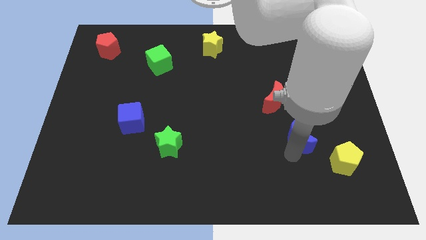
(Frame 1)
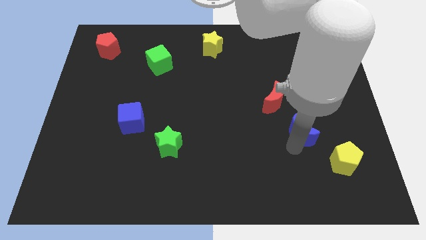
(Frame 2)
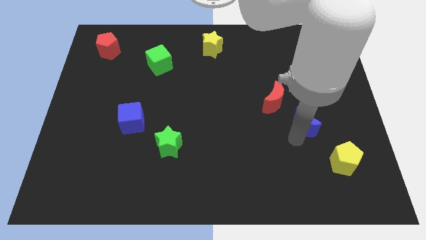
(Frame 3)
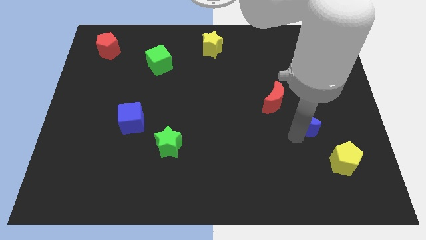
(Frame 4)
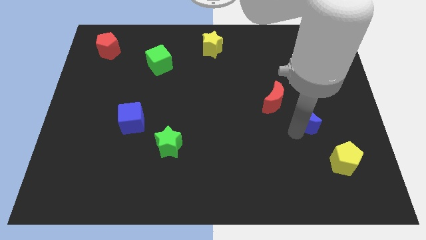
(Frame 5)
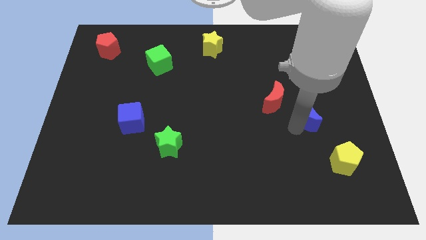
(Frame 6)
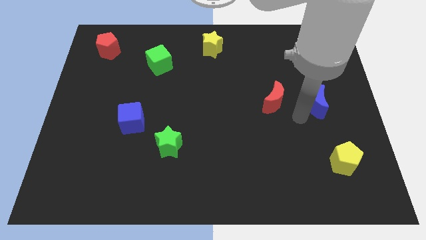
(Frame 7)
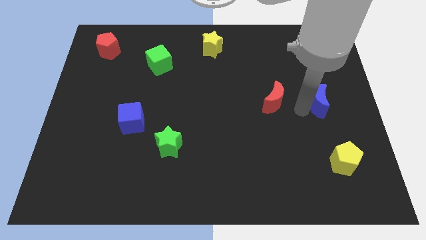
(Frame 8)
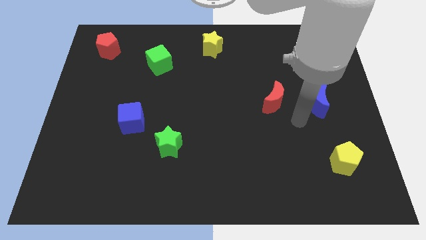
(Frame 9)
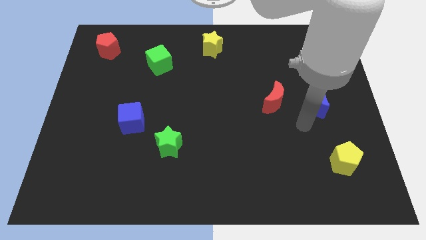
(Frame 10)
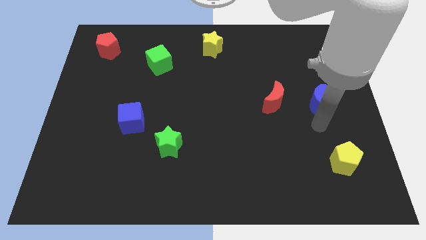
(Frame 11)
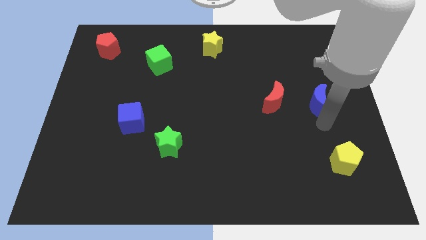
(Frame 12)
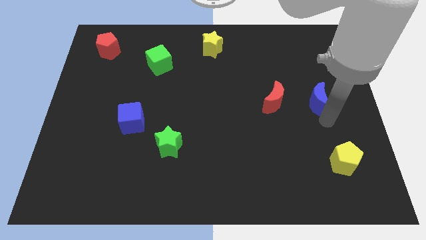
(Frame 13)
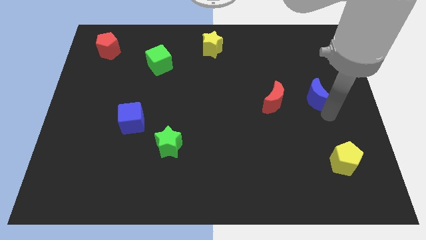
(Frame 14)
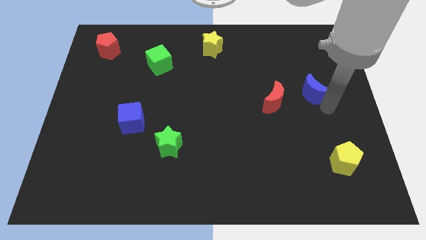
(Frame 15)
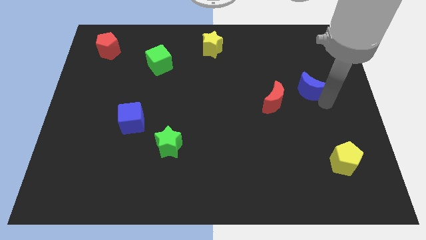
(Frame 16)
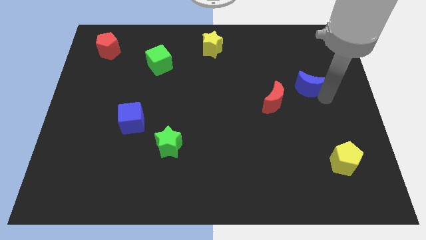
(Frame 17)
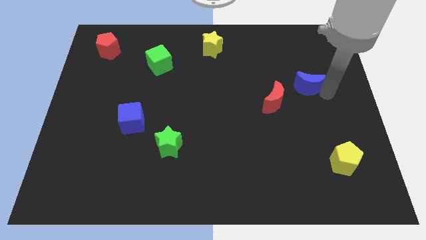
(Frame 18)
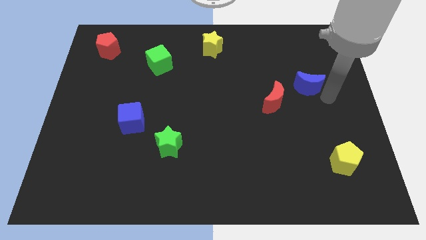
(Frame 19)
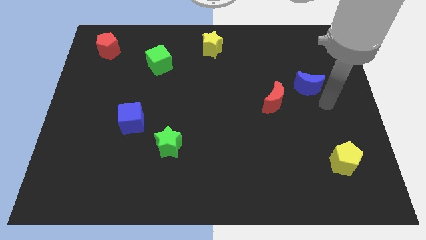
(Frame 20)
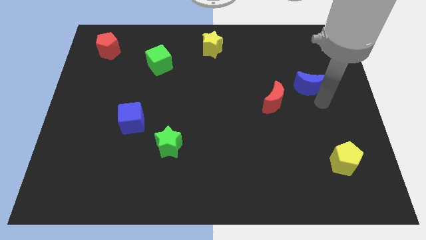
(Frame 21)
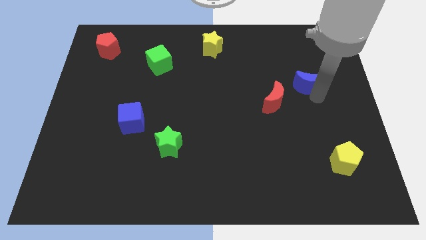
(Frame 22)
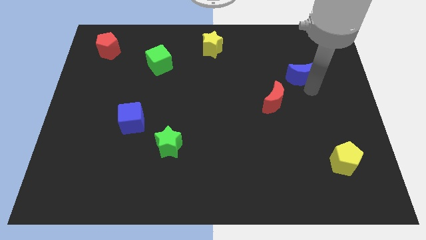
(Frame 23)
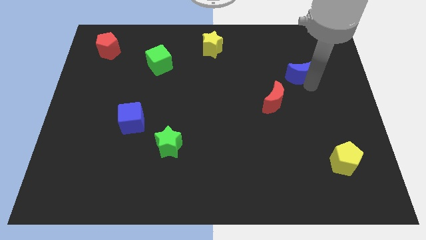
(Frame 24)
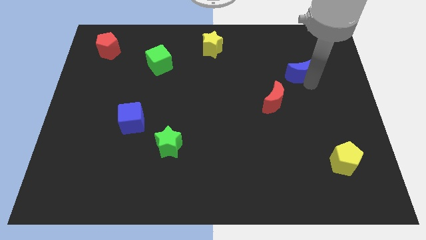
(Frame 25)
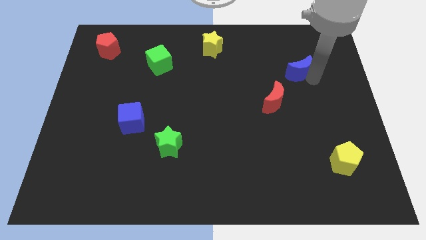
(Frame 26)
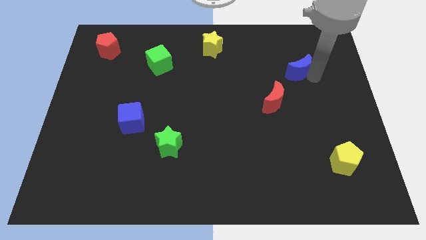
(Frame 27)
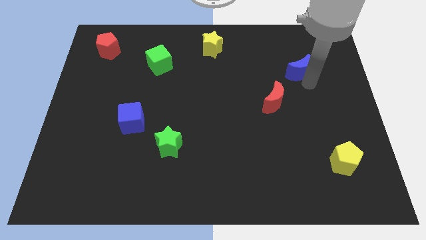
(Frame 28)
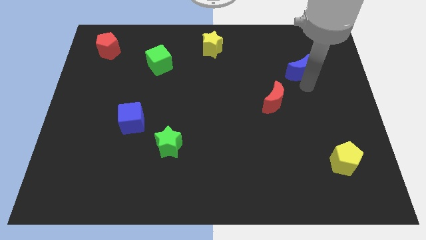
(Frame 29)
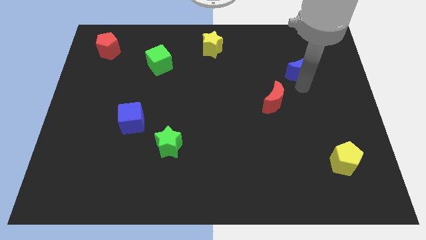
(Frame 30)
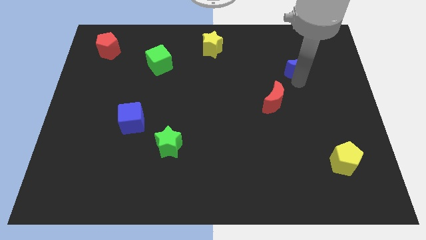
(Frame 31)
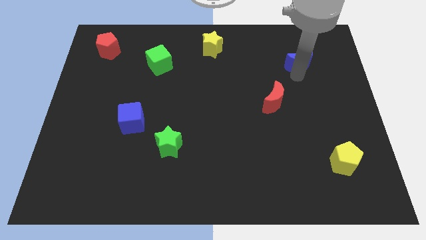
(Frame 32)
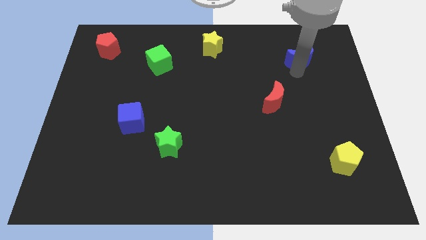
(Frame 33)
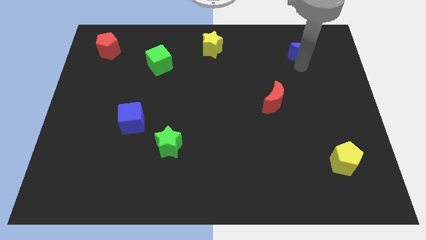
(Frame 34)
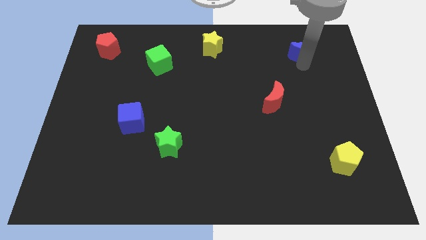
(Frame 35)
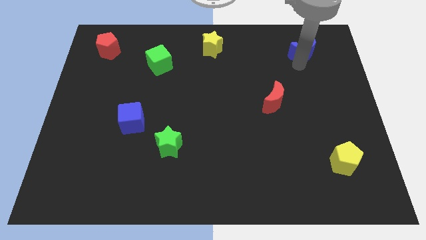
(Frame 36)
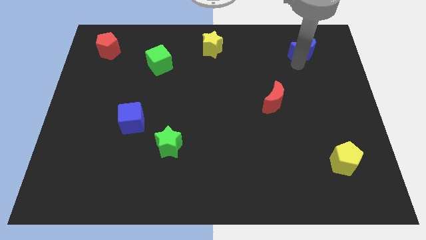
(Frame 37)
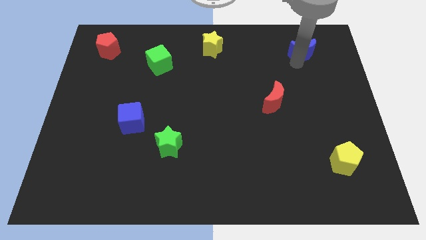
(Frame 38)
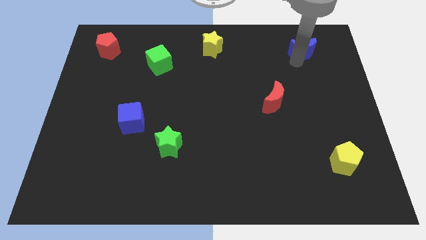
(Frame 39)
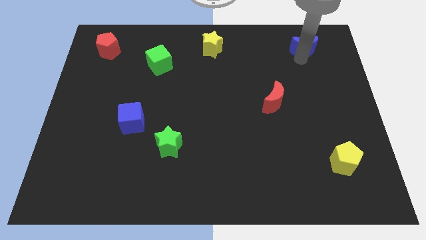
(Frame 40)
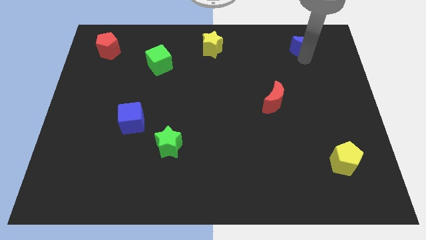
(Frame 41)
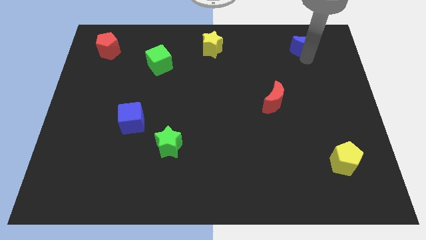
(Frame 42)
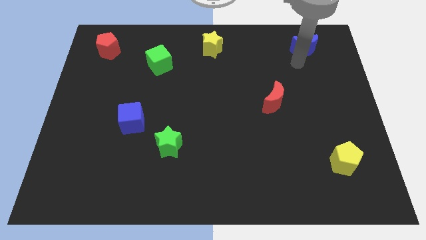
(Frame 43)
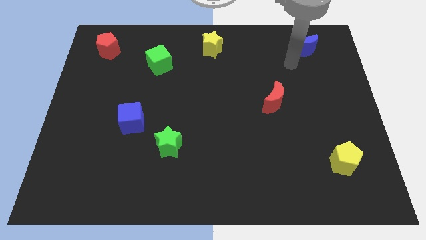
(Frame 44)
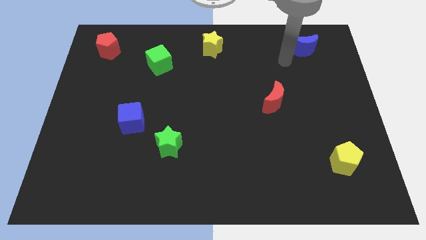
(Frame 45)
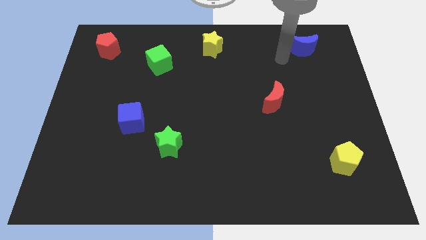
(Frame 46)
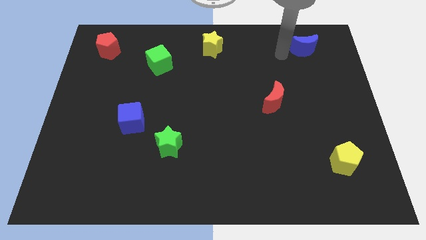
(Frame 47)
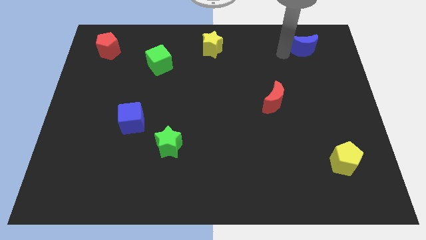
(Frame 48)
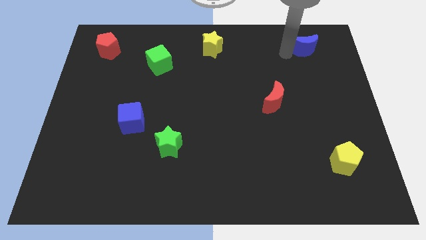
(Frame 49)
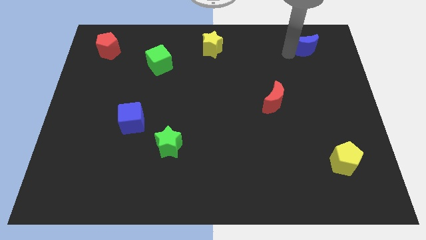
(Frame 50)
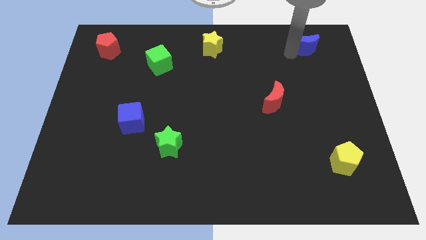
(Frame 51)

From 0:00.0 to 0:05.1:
slide blue moon towards top right

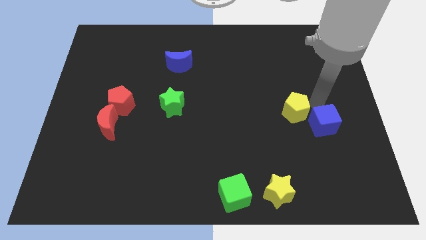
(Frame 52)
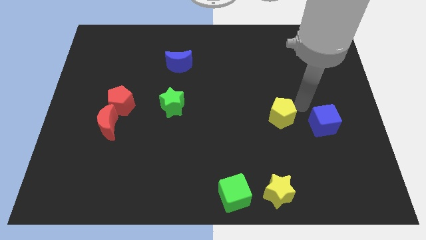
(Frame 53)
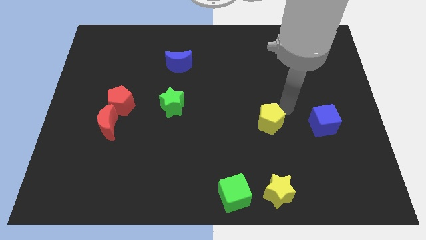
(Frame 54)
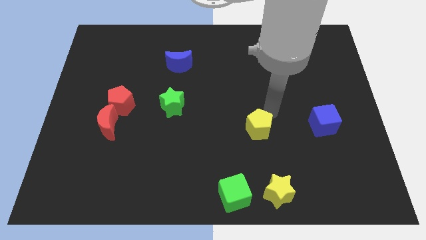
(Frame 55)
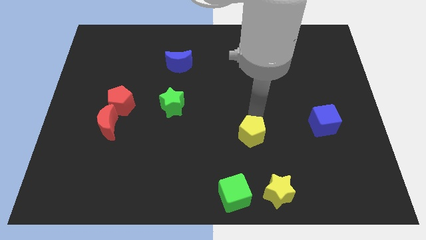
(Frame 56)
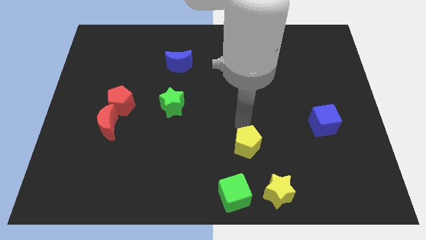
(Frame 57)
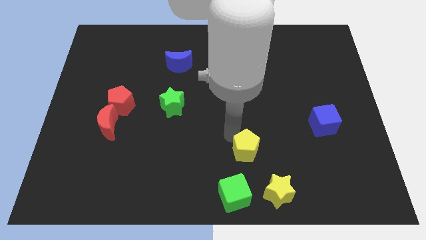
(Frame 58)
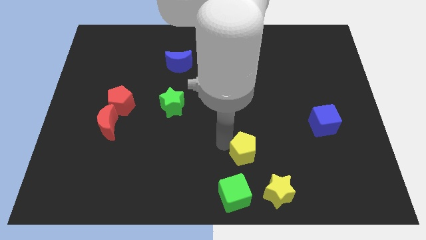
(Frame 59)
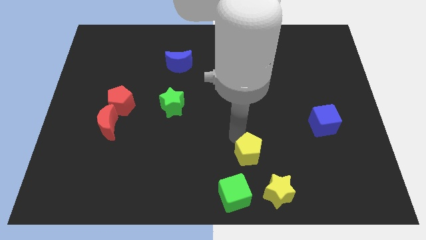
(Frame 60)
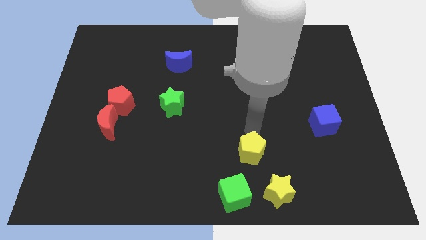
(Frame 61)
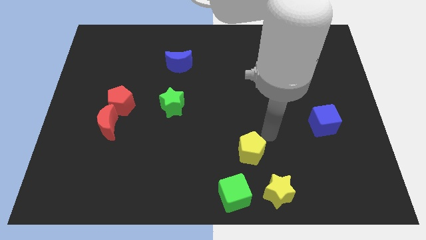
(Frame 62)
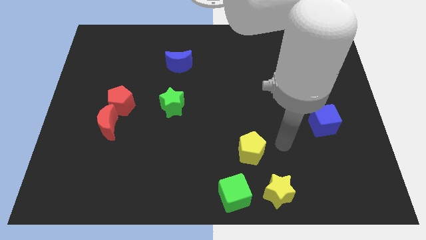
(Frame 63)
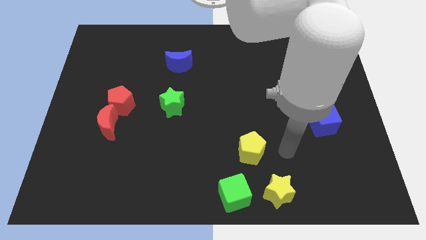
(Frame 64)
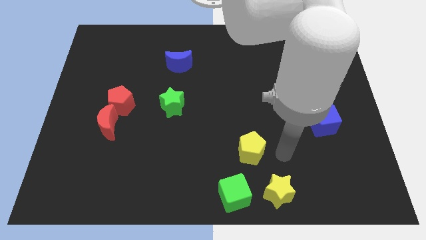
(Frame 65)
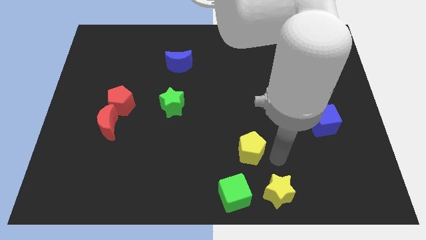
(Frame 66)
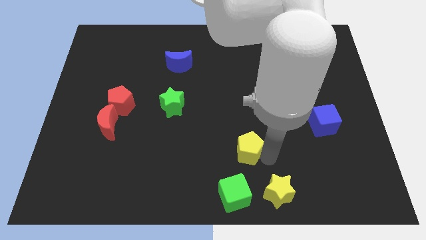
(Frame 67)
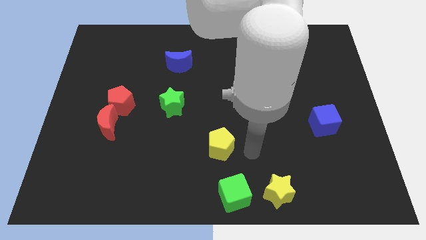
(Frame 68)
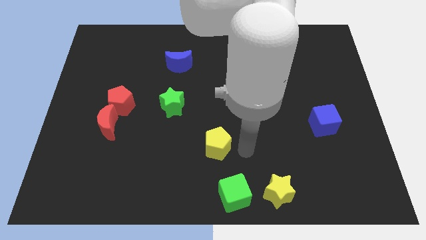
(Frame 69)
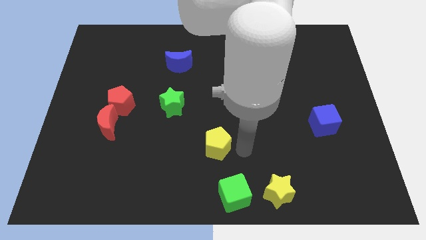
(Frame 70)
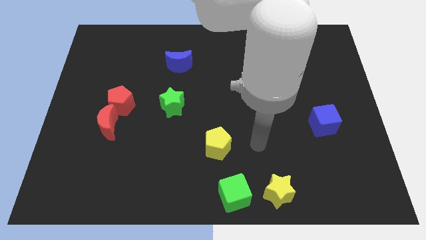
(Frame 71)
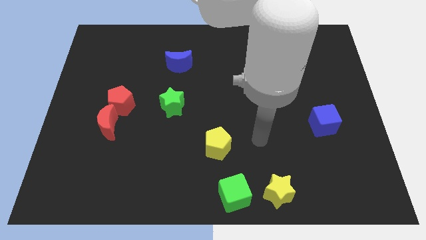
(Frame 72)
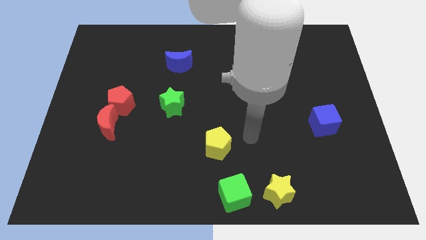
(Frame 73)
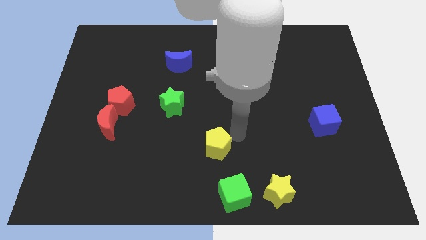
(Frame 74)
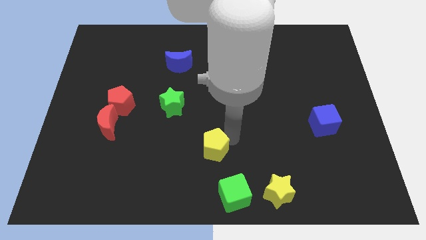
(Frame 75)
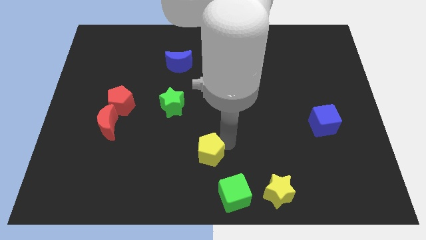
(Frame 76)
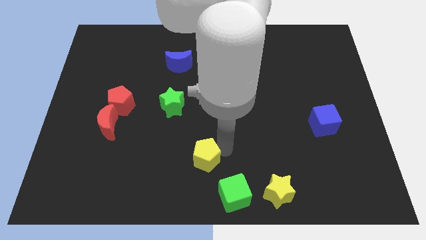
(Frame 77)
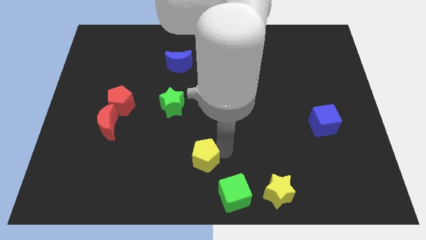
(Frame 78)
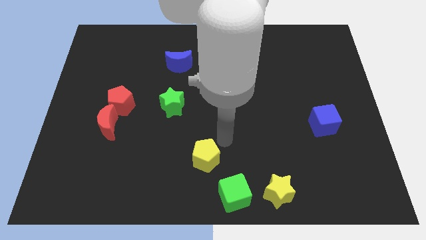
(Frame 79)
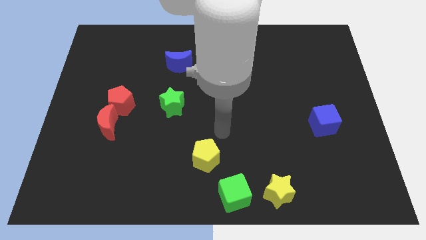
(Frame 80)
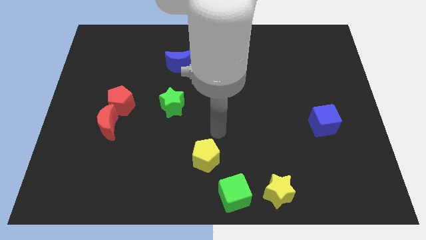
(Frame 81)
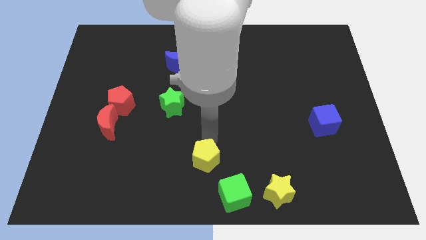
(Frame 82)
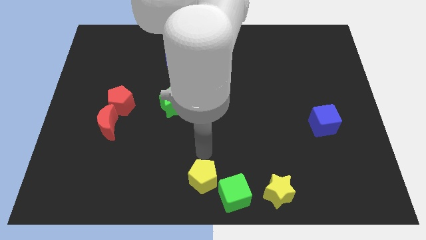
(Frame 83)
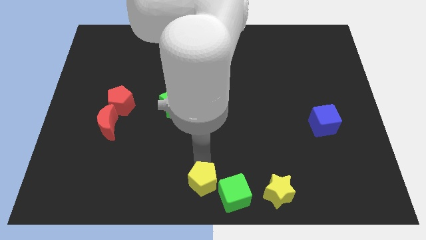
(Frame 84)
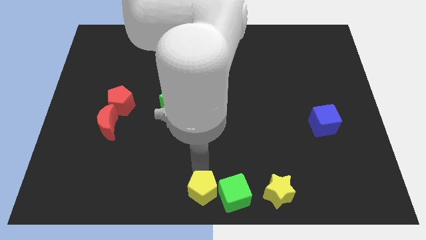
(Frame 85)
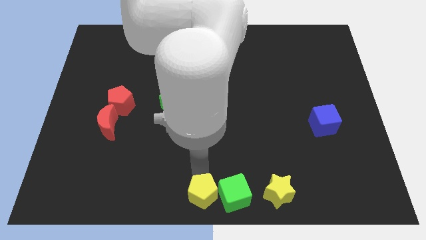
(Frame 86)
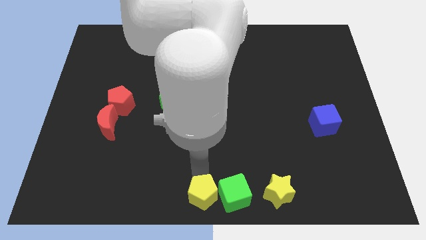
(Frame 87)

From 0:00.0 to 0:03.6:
push the yellow pentagon to the bottom center of the board

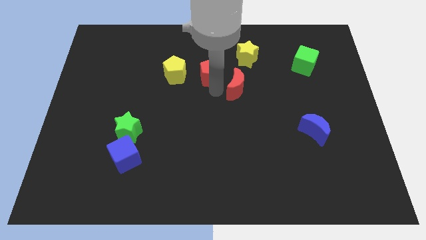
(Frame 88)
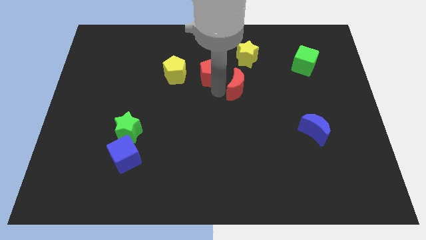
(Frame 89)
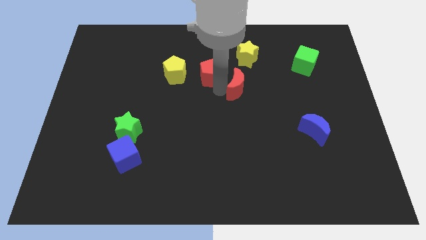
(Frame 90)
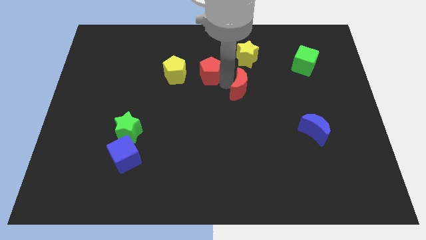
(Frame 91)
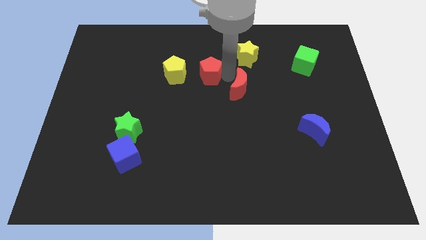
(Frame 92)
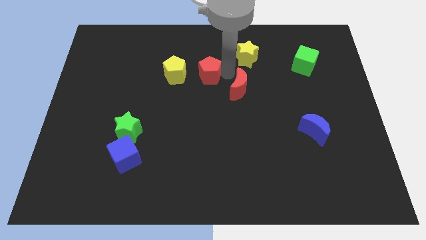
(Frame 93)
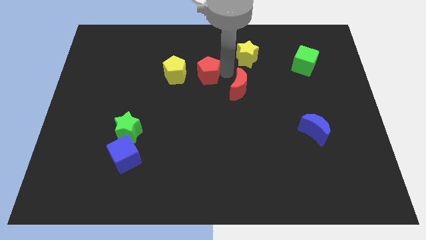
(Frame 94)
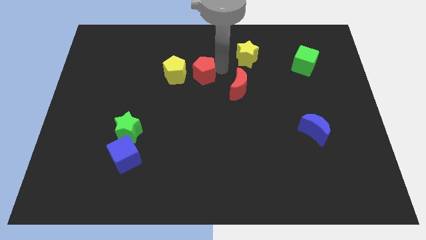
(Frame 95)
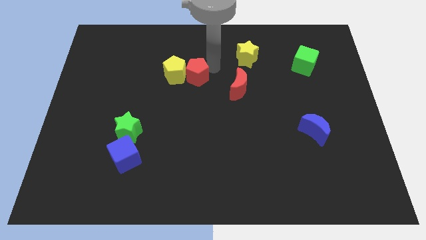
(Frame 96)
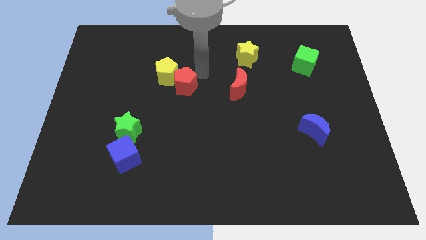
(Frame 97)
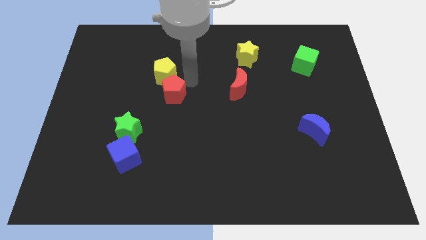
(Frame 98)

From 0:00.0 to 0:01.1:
place the red pentagon below the yellow pentagon
